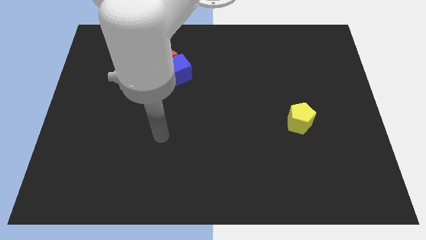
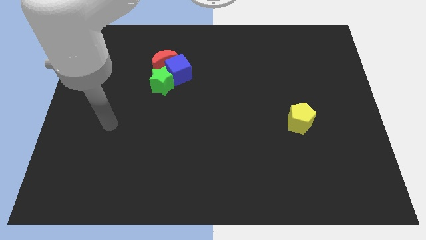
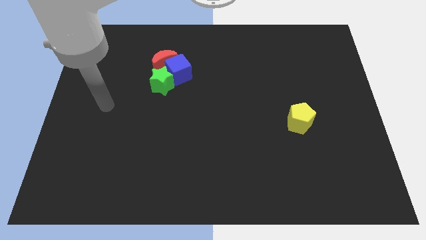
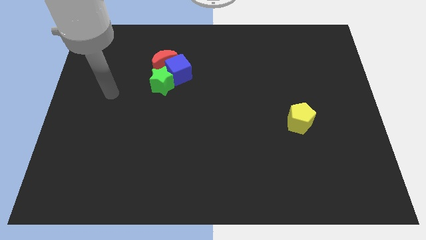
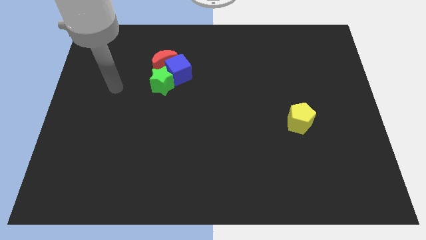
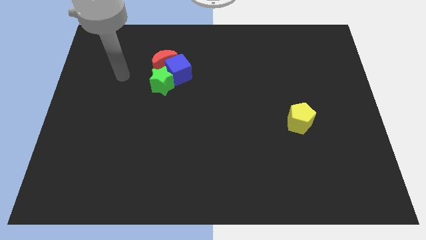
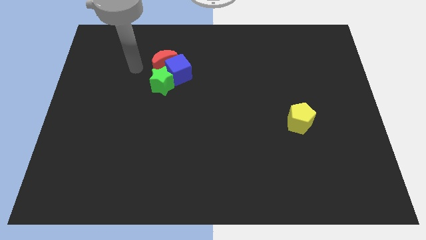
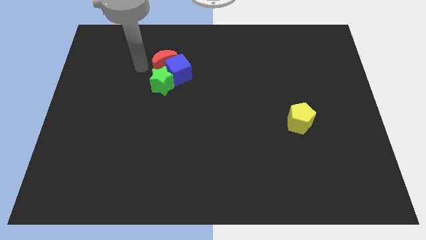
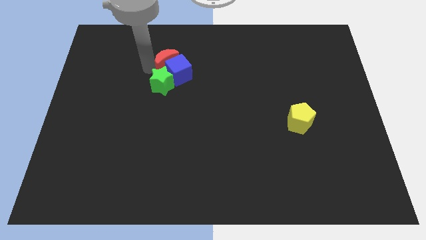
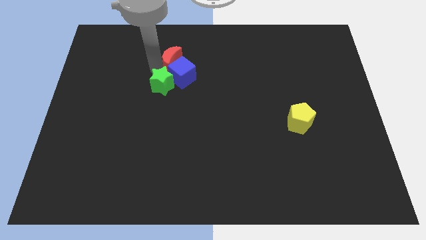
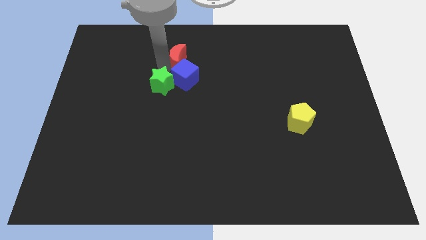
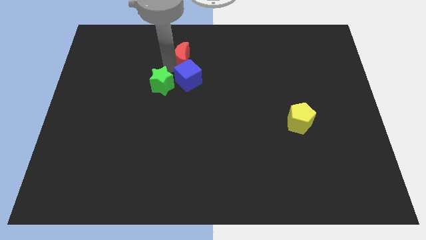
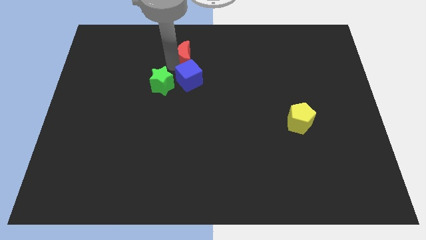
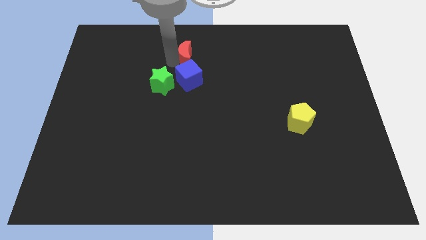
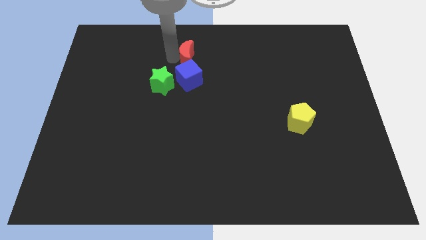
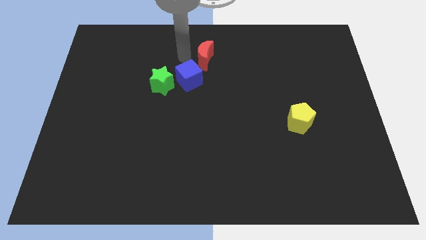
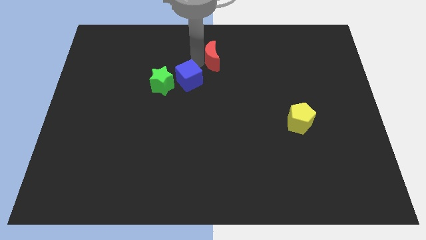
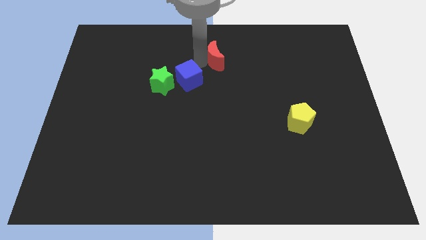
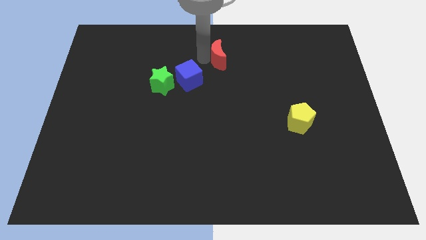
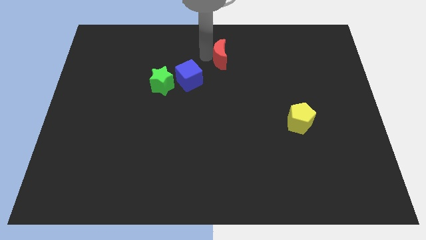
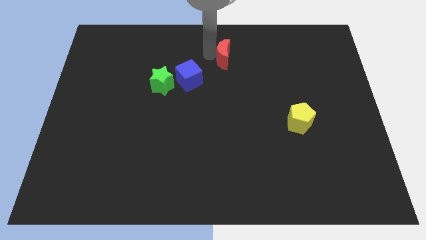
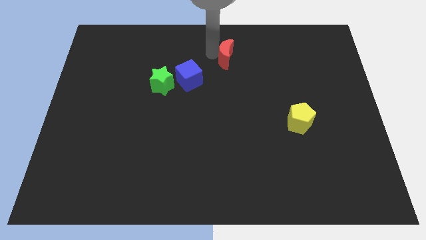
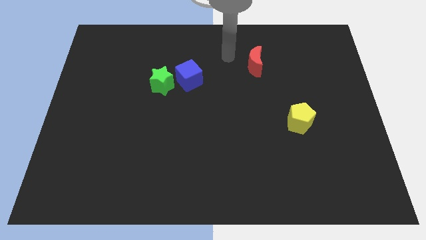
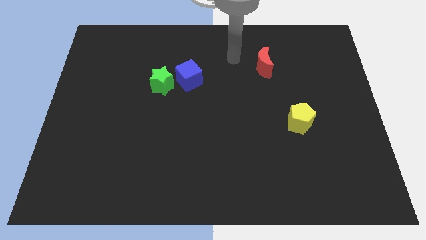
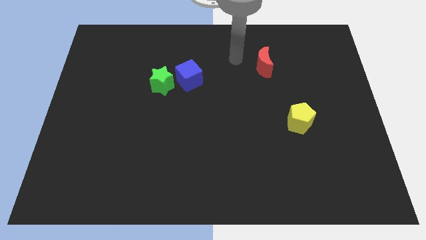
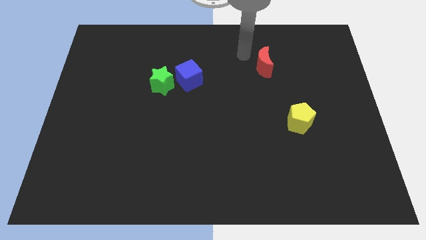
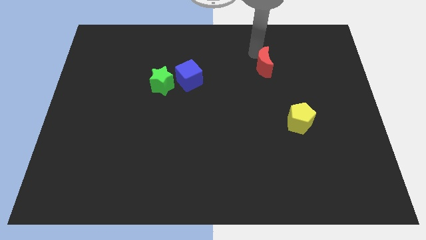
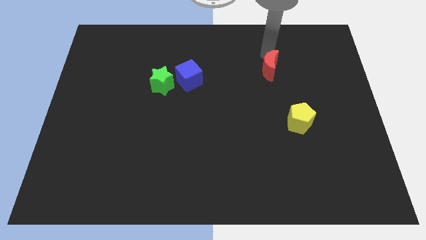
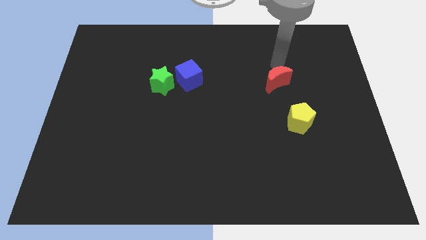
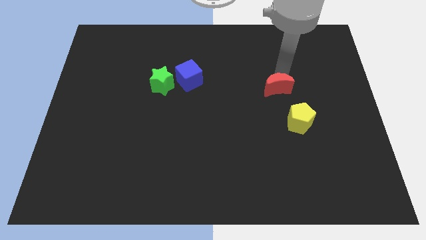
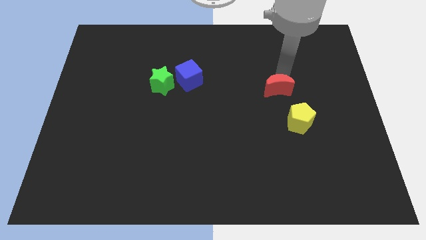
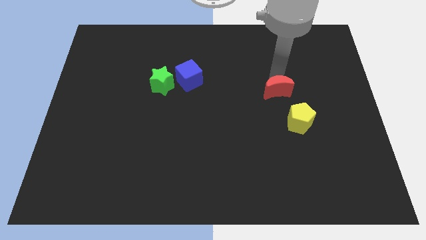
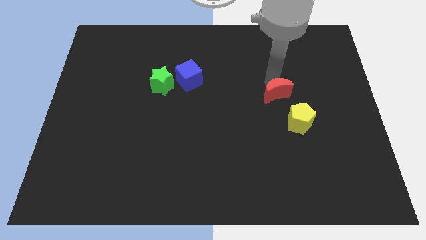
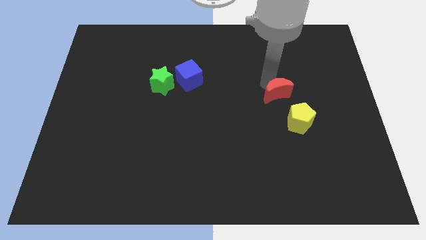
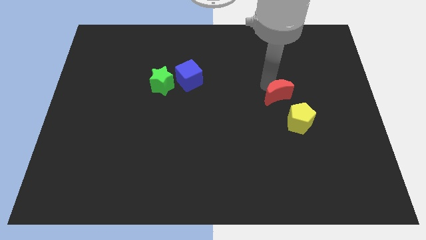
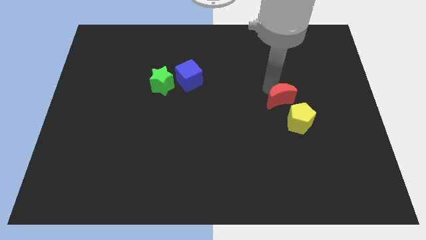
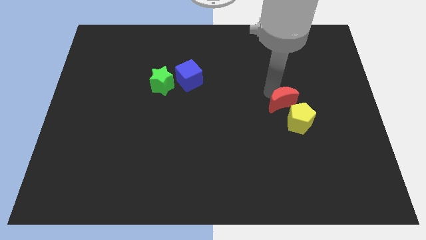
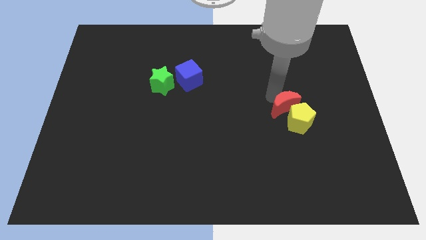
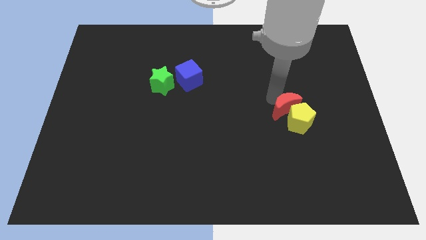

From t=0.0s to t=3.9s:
move the red moon close to the pentagon

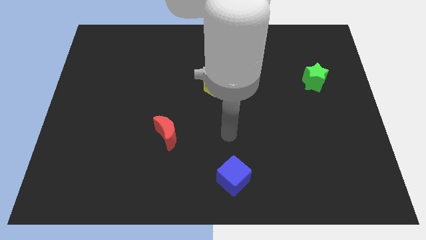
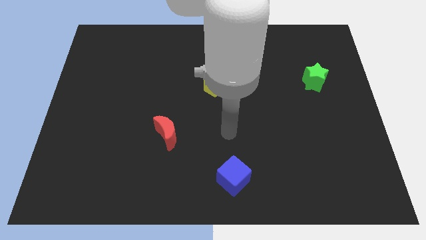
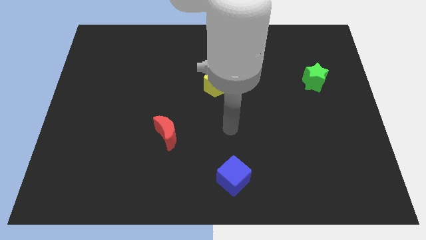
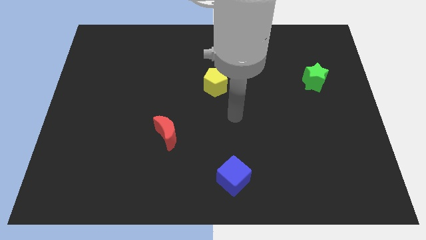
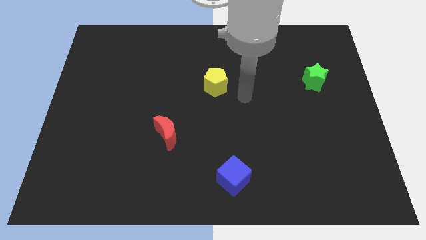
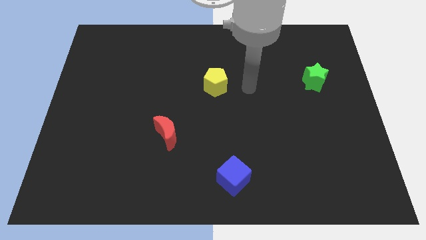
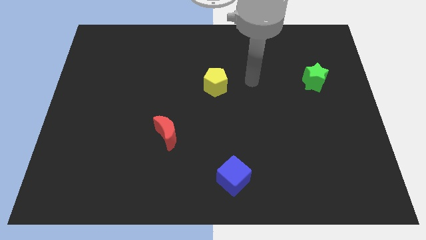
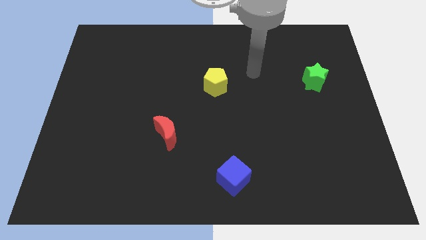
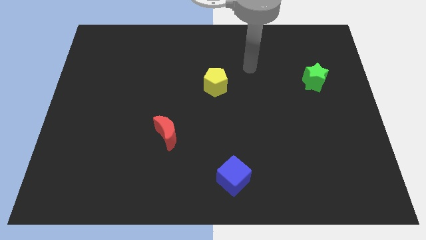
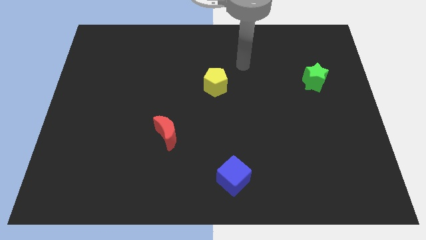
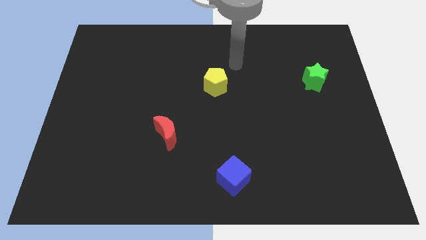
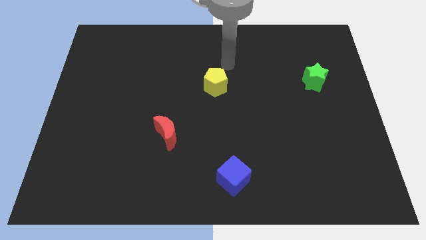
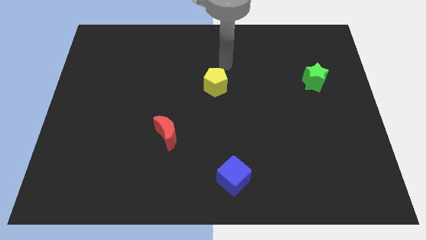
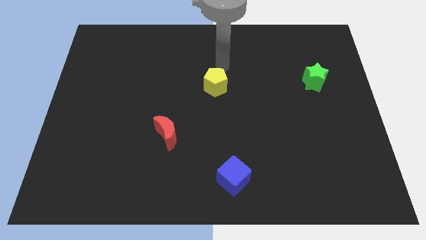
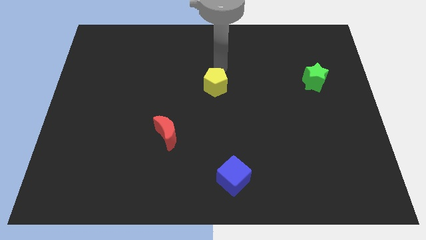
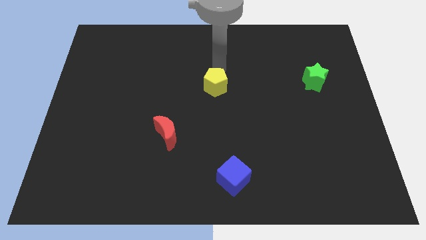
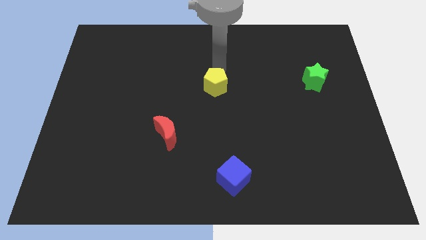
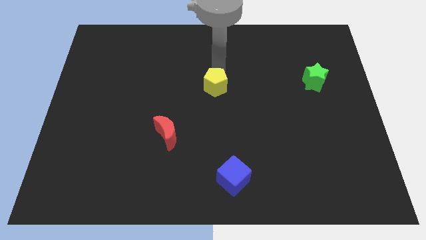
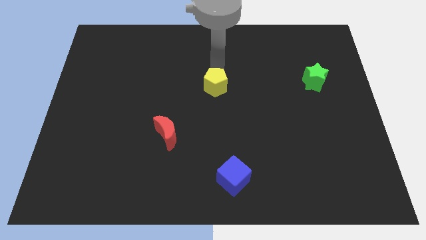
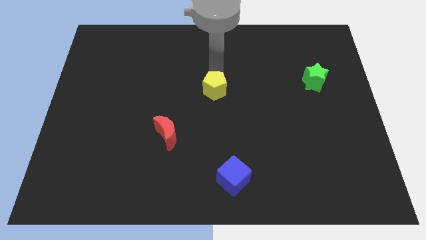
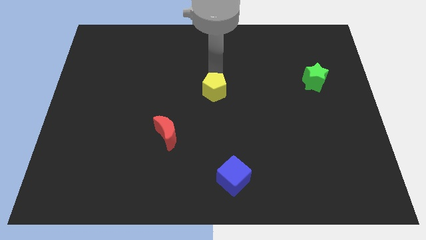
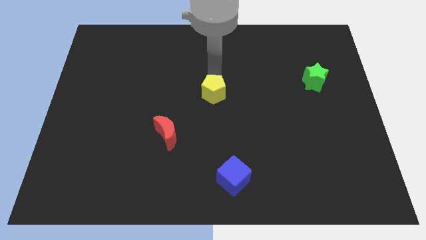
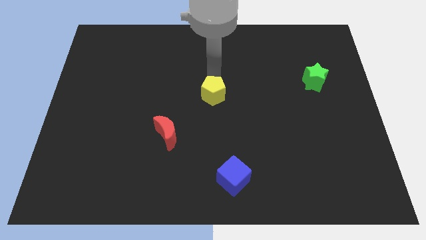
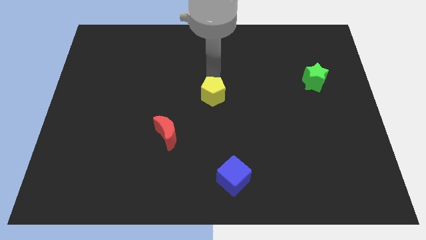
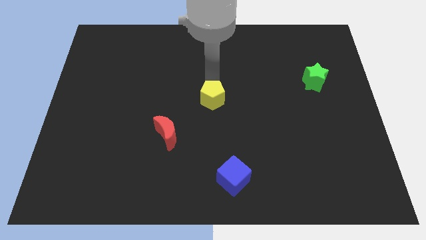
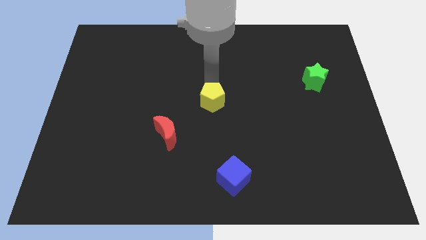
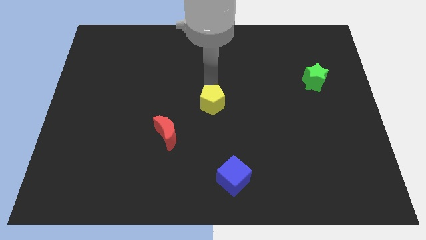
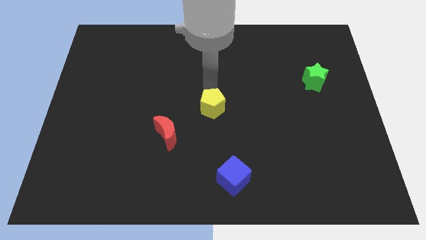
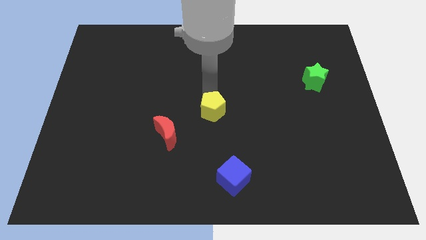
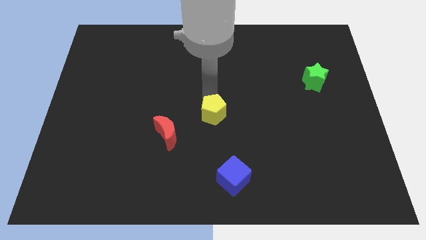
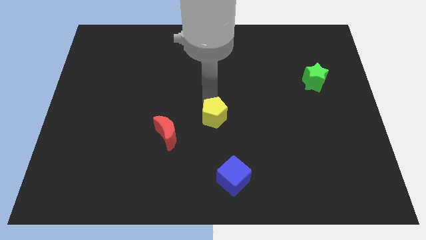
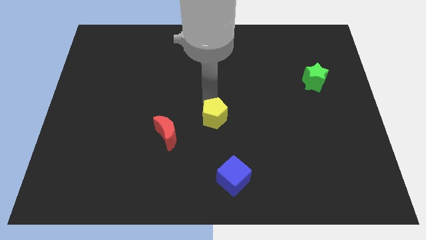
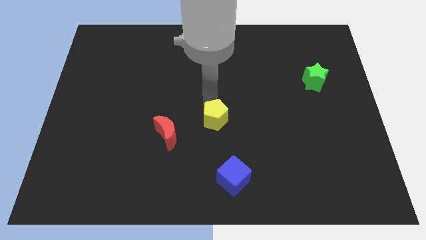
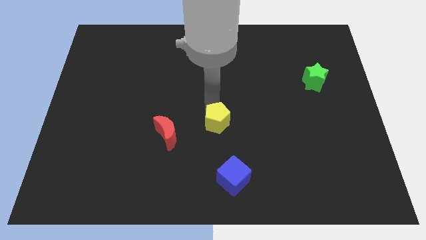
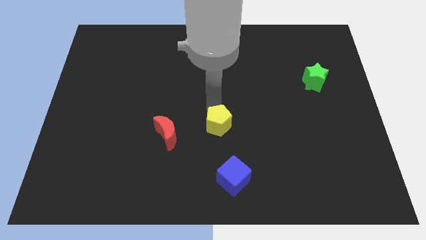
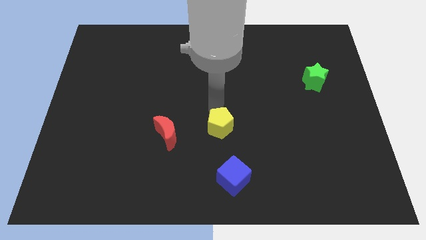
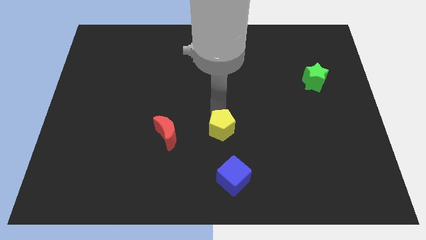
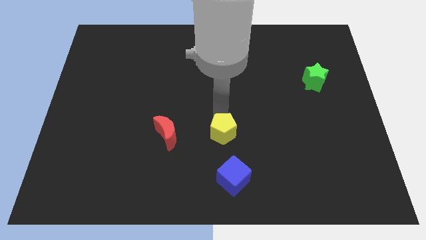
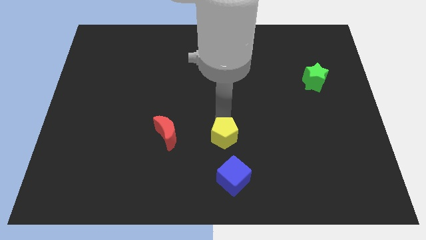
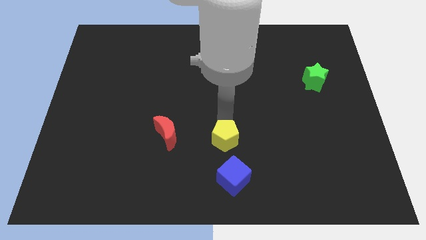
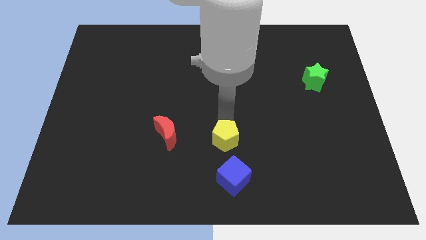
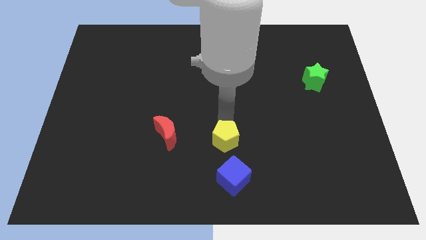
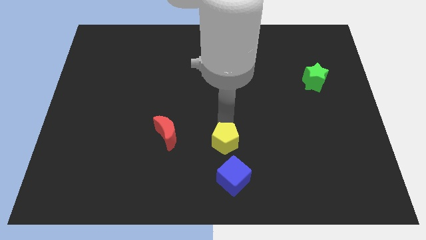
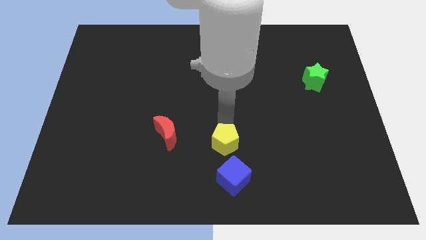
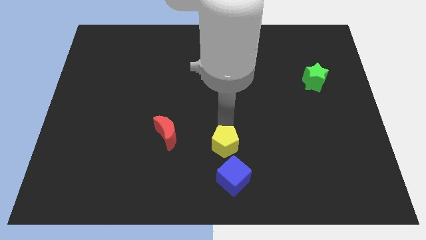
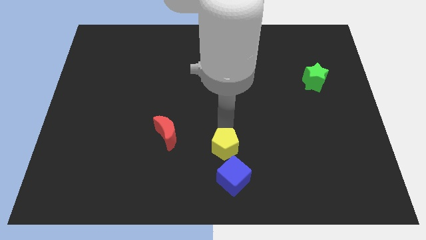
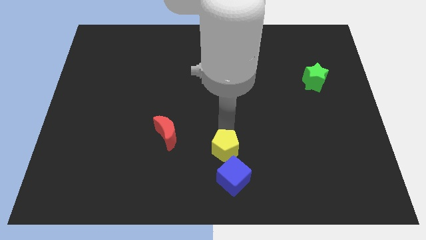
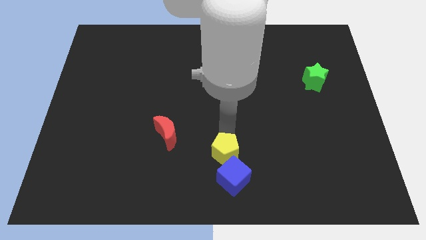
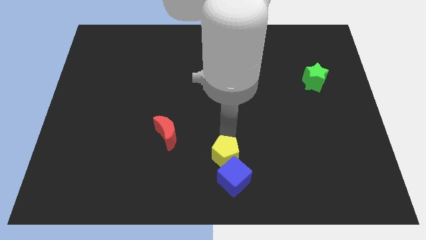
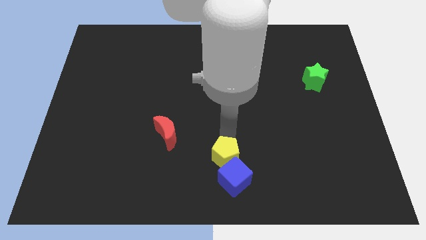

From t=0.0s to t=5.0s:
move the yellow block next to the cube
